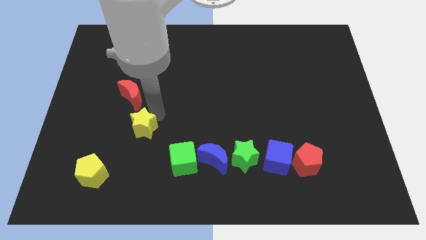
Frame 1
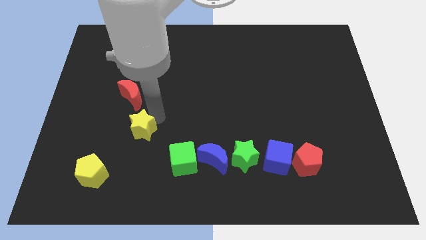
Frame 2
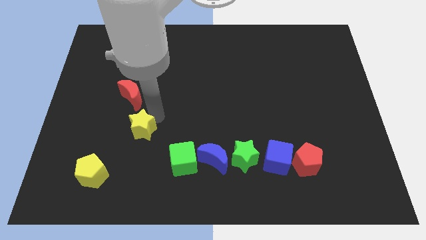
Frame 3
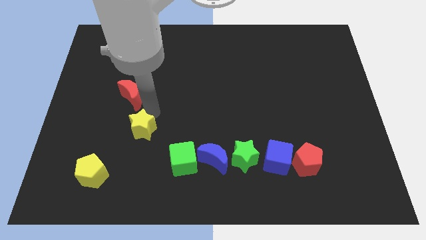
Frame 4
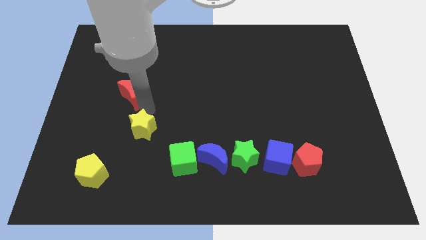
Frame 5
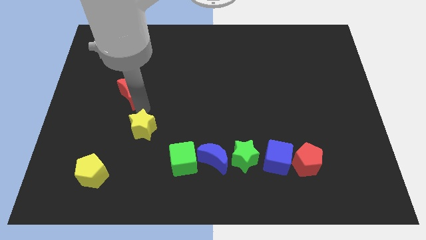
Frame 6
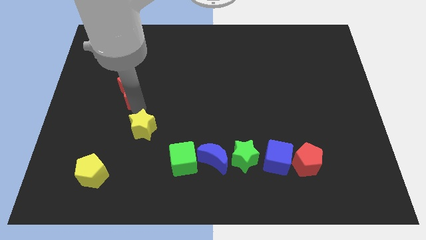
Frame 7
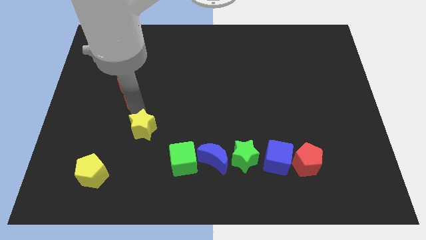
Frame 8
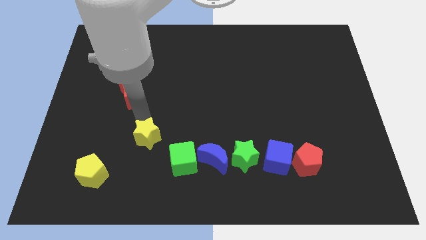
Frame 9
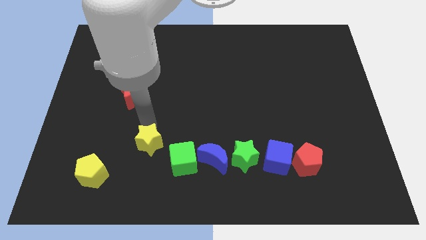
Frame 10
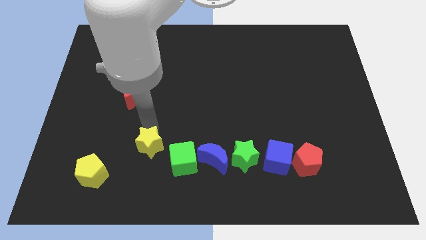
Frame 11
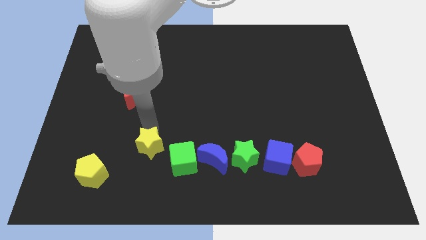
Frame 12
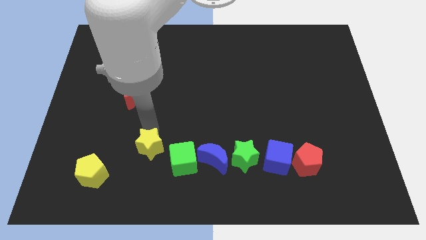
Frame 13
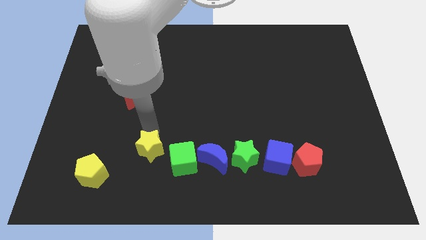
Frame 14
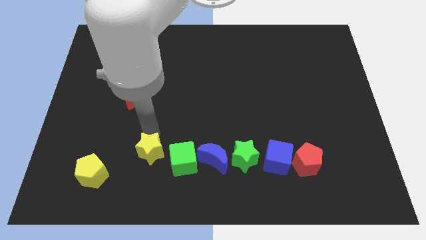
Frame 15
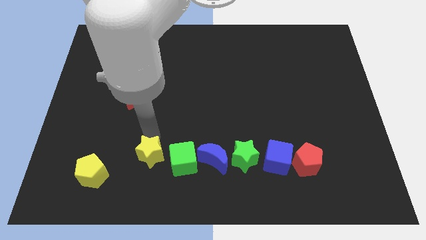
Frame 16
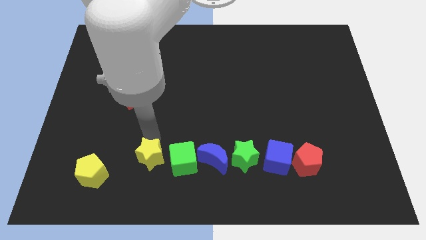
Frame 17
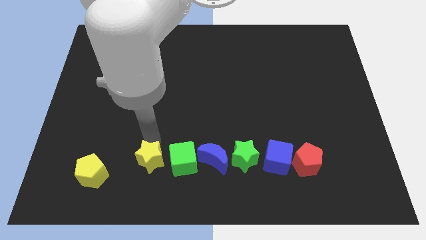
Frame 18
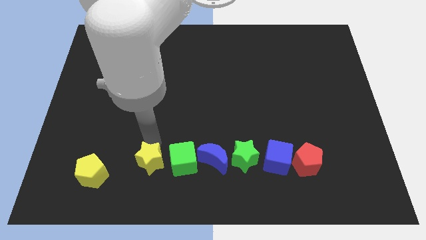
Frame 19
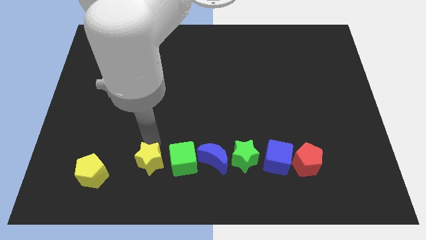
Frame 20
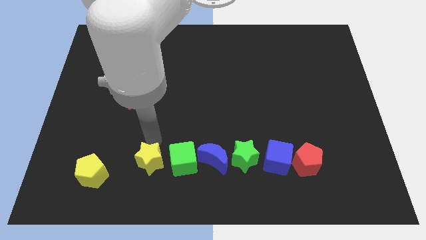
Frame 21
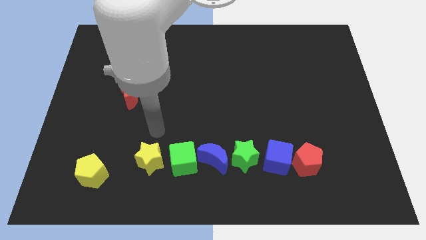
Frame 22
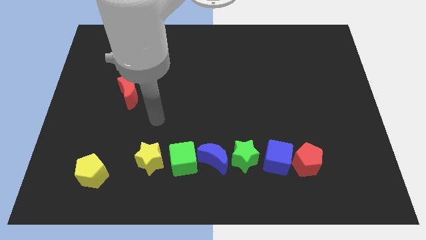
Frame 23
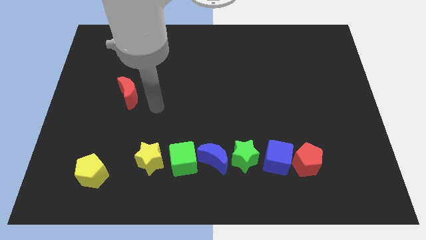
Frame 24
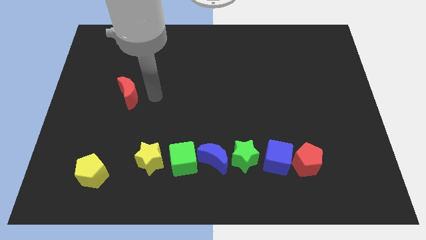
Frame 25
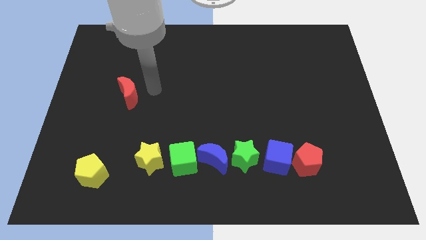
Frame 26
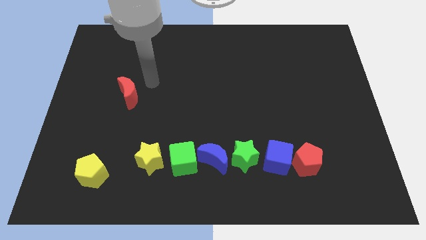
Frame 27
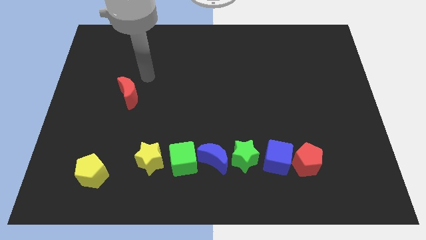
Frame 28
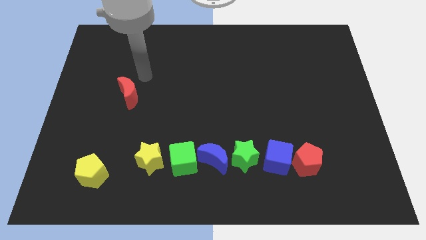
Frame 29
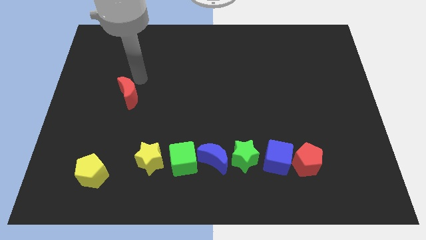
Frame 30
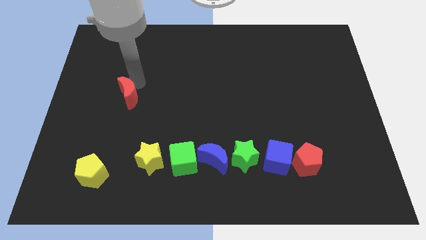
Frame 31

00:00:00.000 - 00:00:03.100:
move the yellow star to the left of the green cube

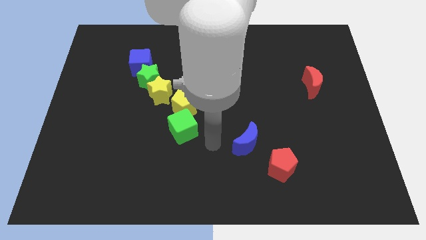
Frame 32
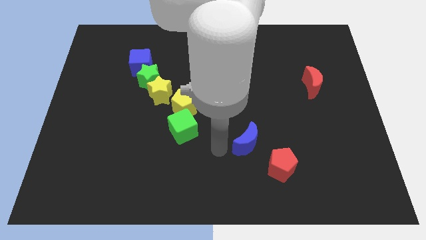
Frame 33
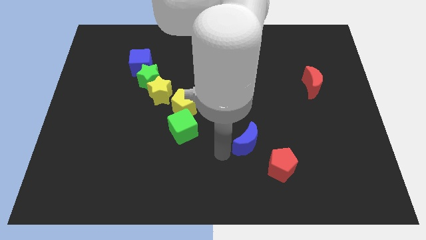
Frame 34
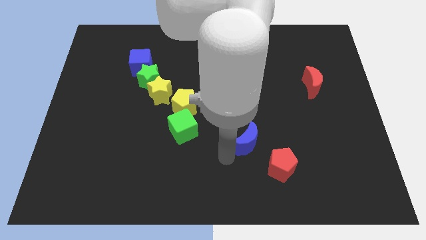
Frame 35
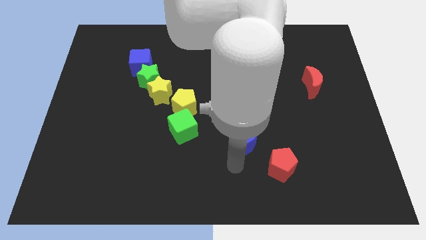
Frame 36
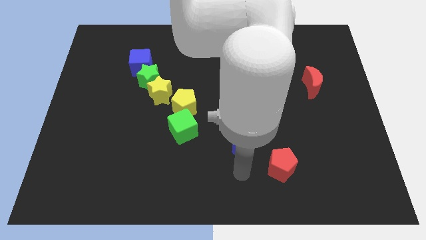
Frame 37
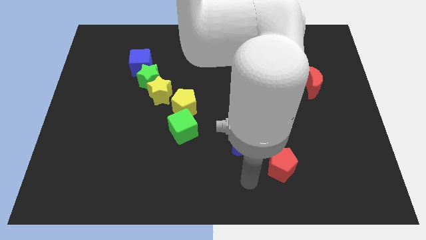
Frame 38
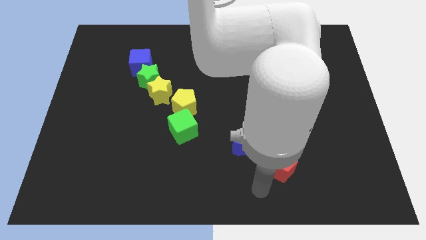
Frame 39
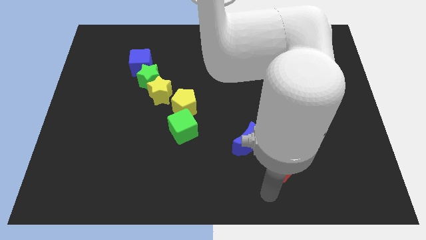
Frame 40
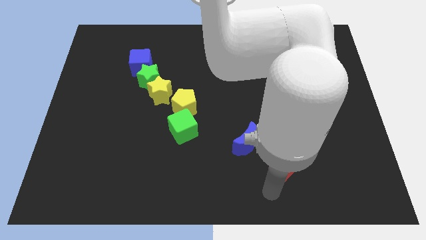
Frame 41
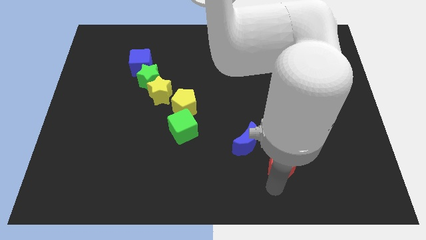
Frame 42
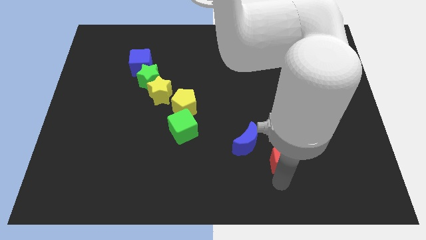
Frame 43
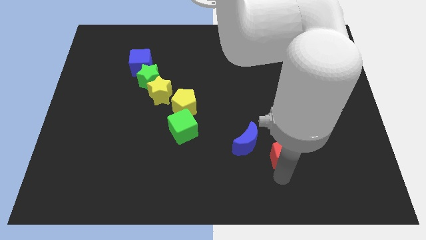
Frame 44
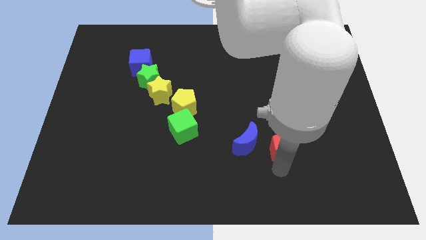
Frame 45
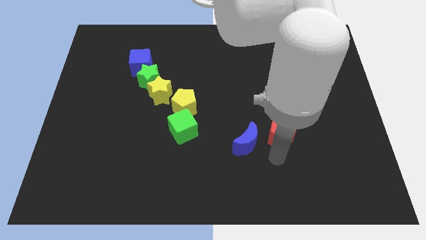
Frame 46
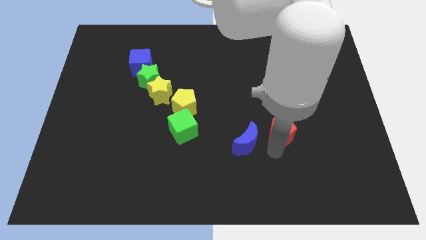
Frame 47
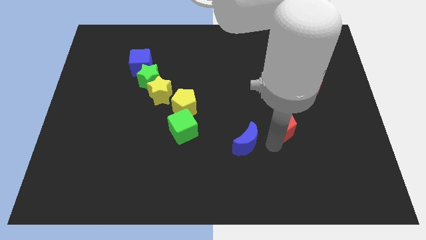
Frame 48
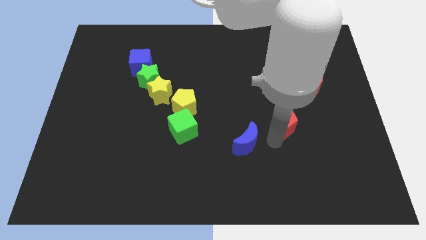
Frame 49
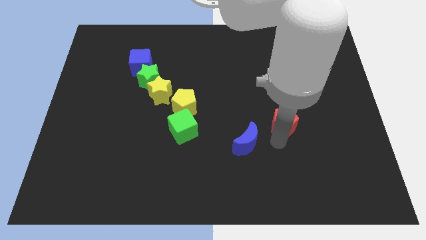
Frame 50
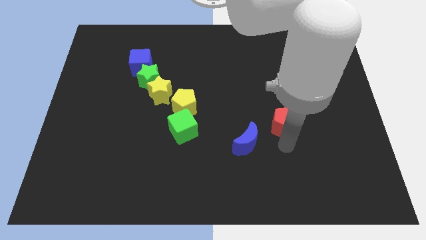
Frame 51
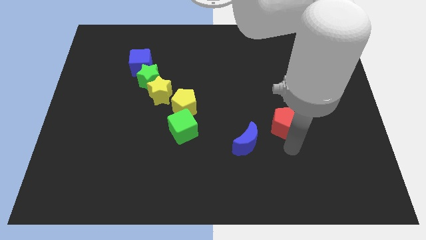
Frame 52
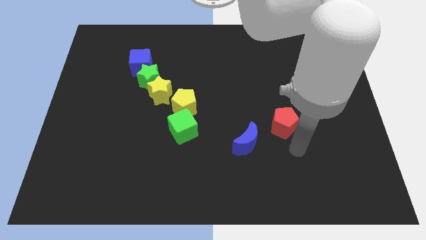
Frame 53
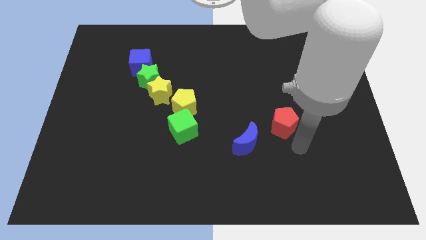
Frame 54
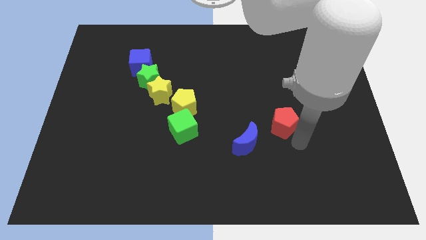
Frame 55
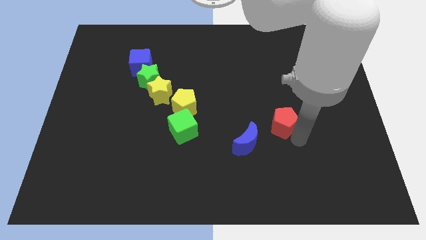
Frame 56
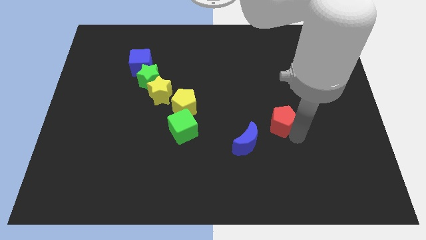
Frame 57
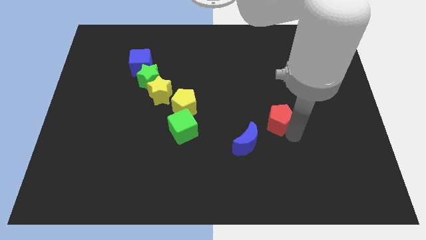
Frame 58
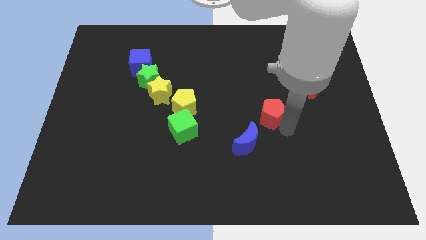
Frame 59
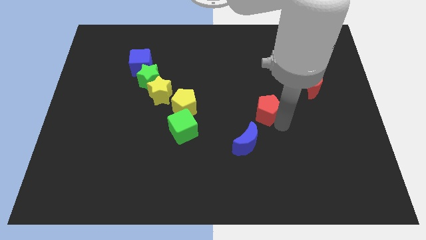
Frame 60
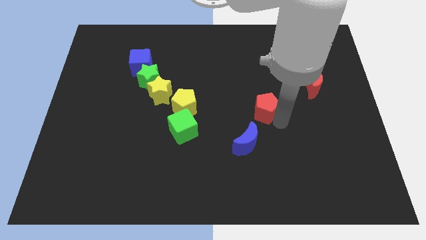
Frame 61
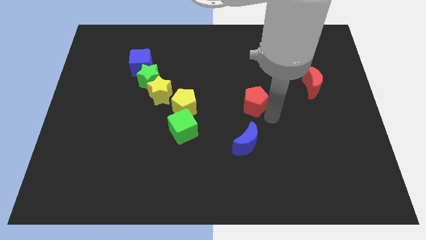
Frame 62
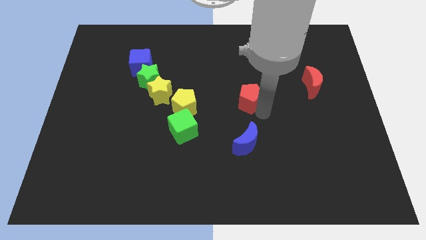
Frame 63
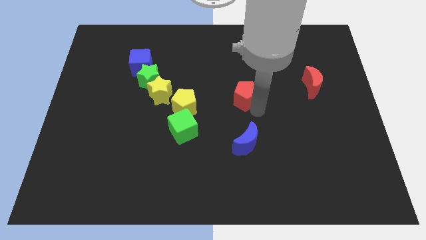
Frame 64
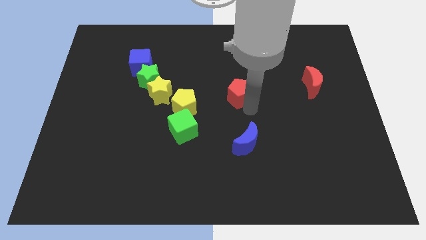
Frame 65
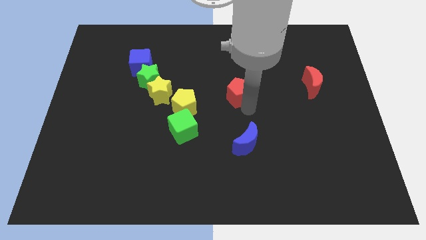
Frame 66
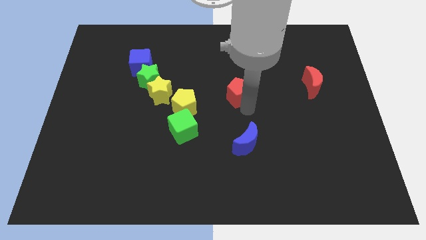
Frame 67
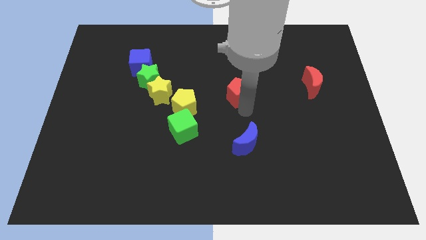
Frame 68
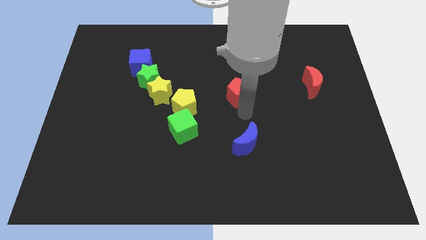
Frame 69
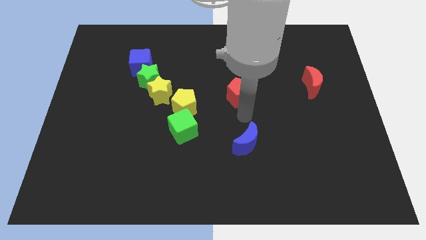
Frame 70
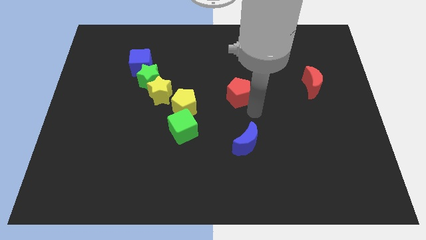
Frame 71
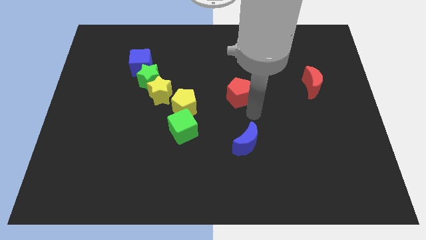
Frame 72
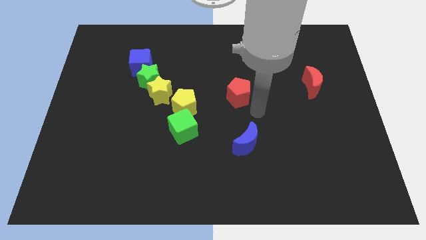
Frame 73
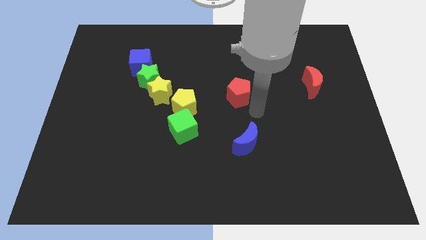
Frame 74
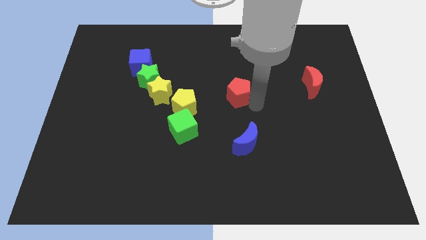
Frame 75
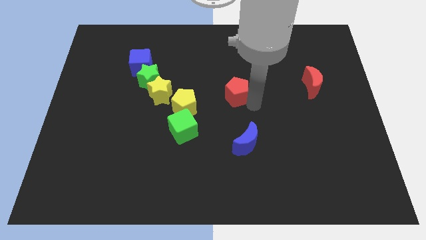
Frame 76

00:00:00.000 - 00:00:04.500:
put the red pentagon vertically above the blue moon

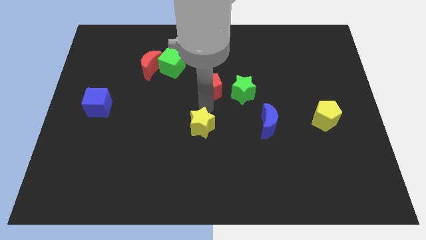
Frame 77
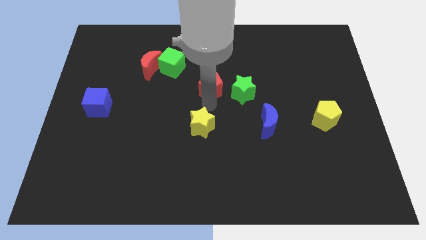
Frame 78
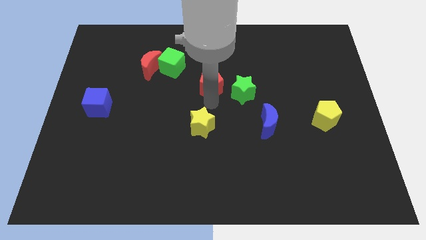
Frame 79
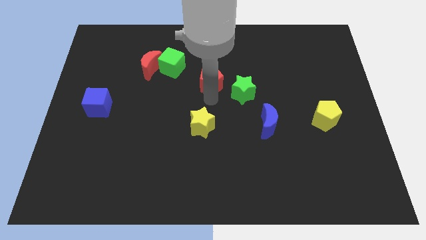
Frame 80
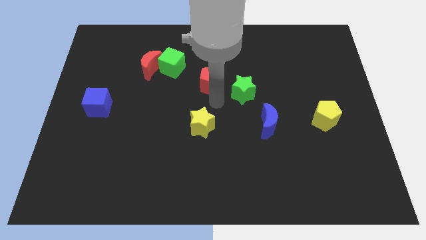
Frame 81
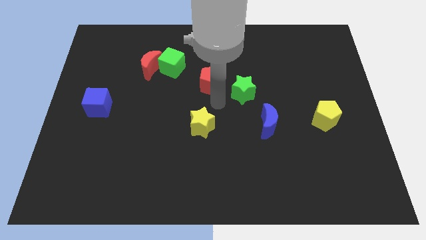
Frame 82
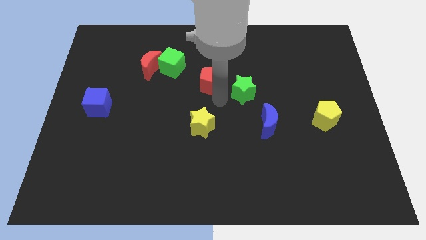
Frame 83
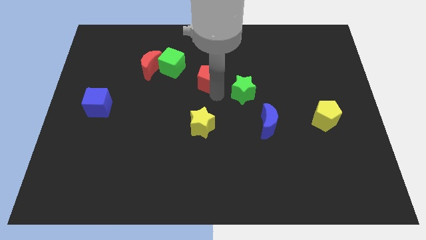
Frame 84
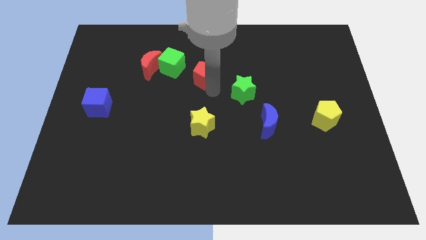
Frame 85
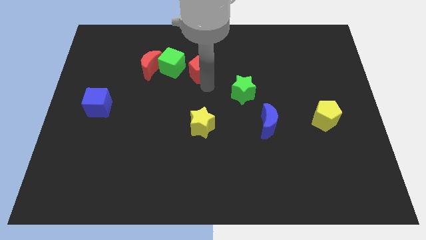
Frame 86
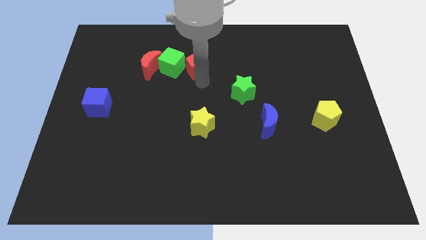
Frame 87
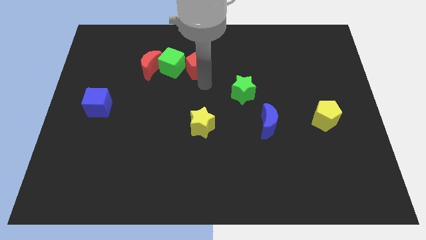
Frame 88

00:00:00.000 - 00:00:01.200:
move the red pentagon to the right of the green cube

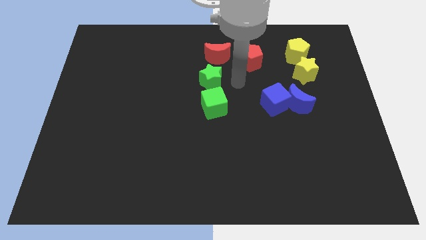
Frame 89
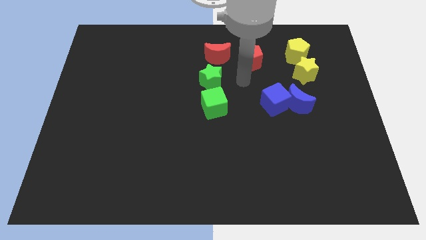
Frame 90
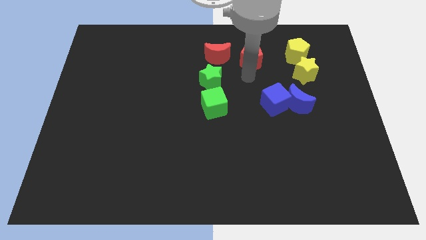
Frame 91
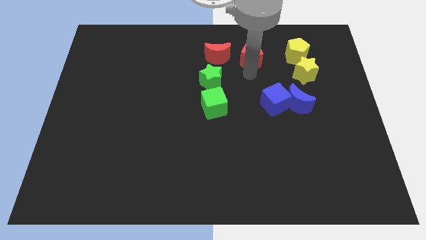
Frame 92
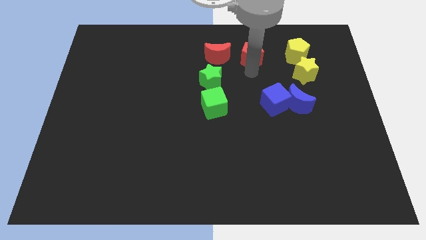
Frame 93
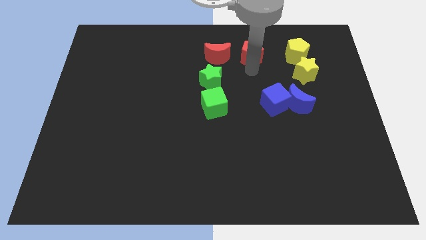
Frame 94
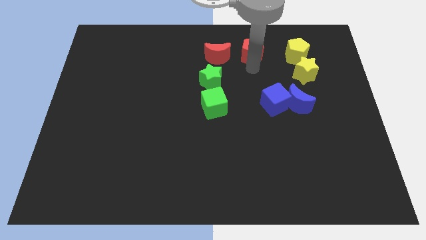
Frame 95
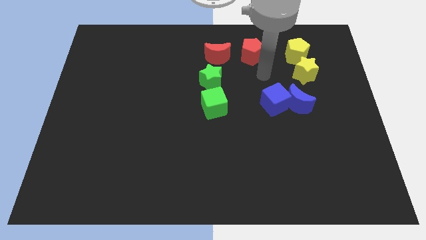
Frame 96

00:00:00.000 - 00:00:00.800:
move the red pentagon parallel to the right side of the red moon
